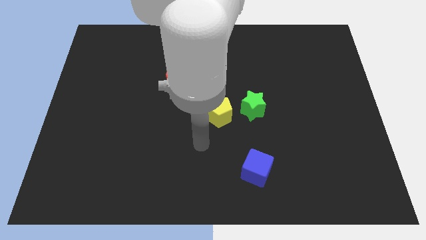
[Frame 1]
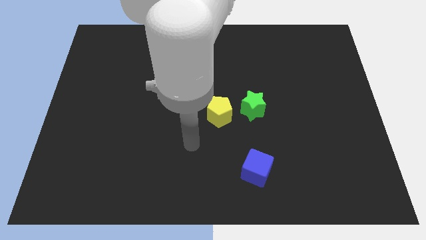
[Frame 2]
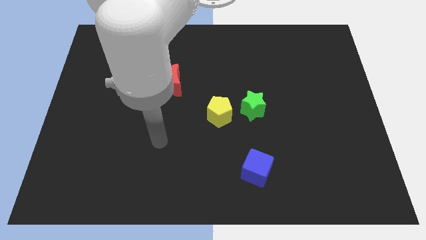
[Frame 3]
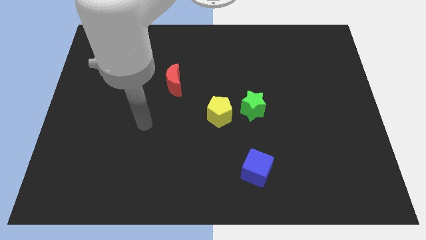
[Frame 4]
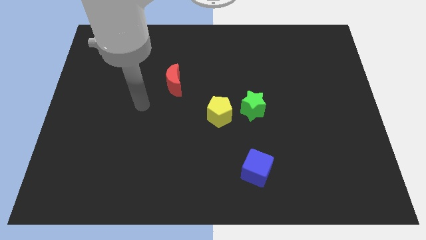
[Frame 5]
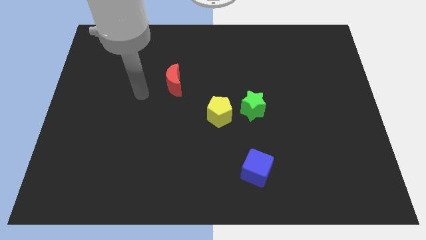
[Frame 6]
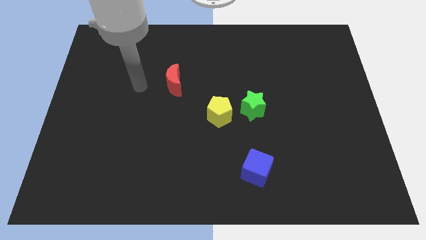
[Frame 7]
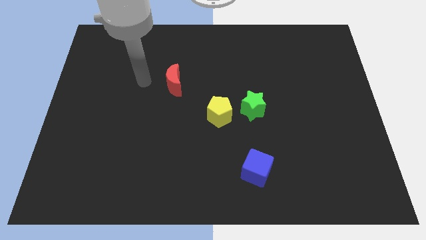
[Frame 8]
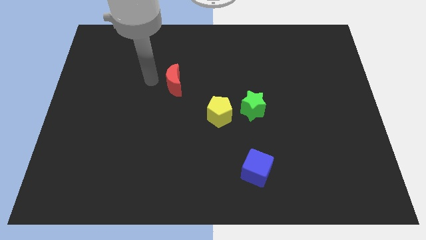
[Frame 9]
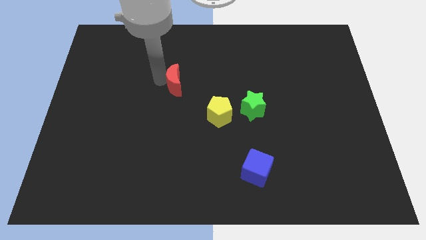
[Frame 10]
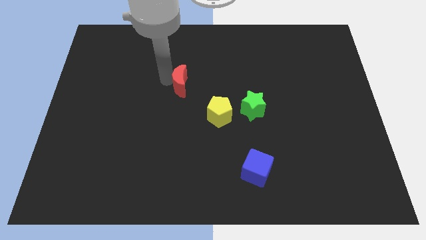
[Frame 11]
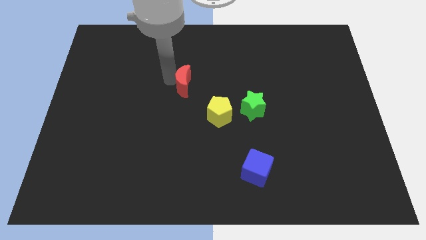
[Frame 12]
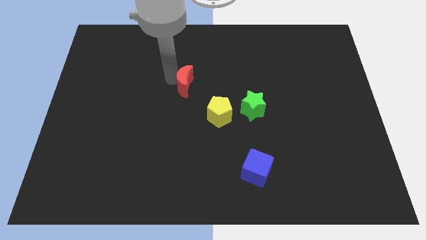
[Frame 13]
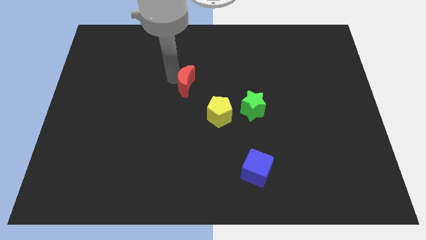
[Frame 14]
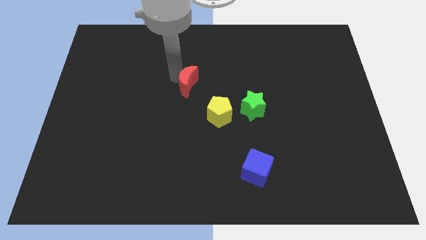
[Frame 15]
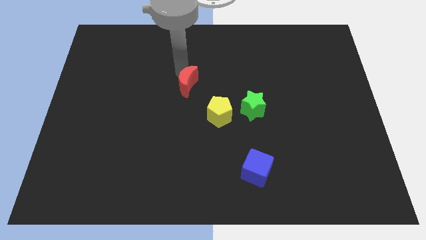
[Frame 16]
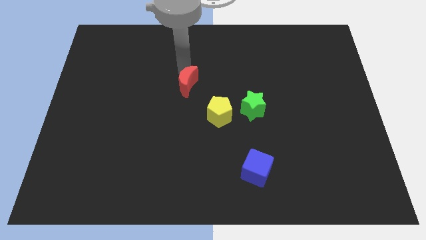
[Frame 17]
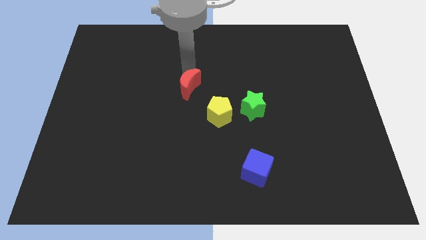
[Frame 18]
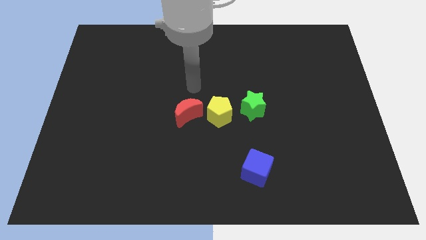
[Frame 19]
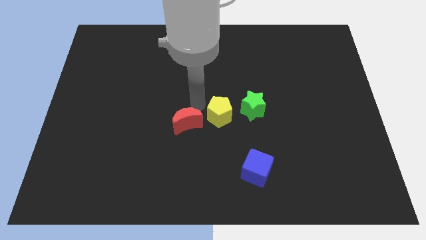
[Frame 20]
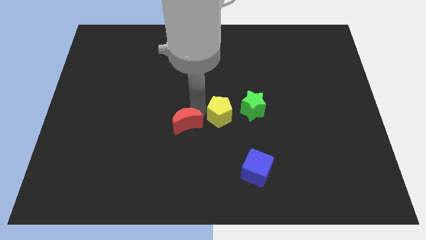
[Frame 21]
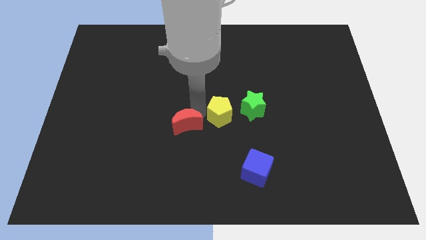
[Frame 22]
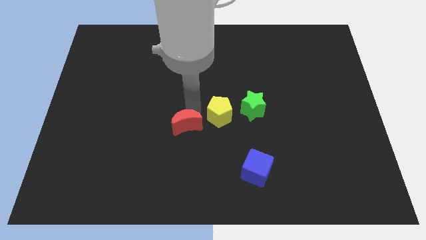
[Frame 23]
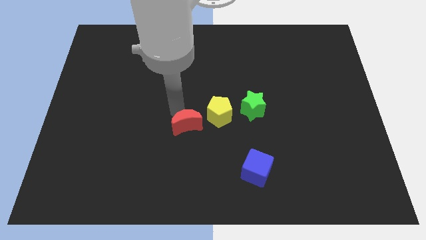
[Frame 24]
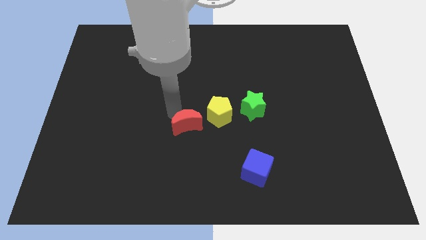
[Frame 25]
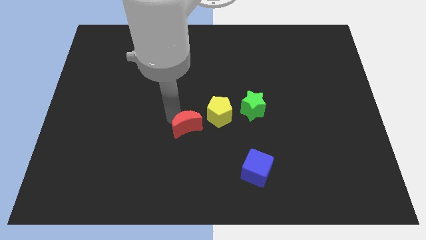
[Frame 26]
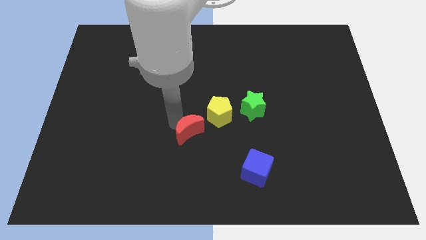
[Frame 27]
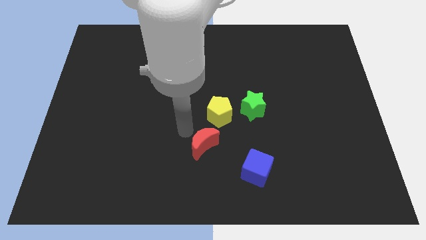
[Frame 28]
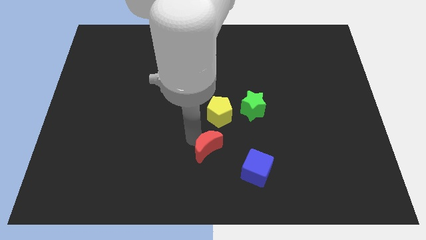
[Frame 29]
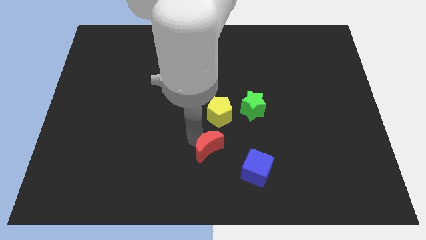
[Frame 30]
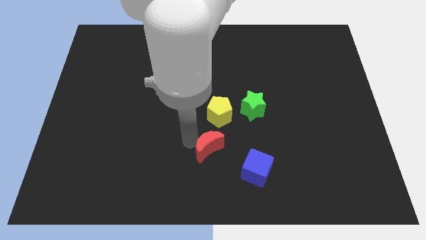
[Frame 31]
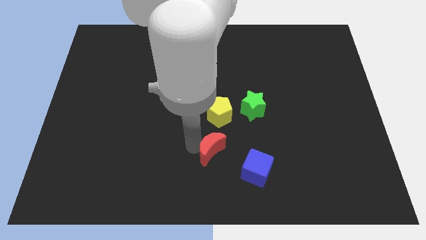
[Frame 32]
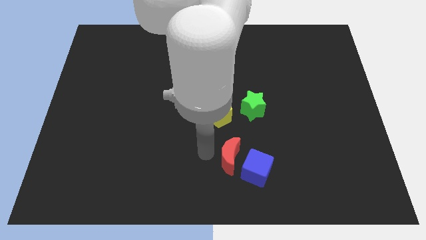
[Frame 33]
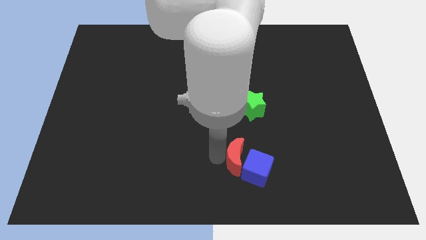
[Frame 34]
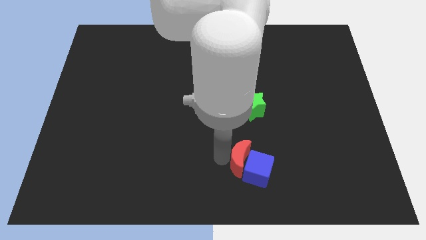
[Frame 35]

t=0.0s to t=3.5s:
move the red moon next to the blue cube

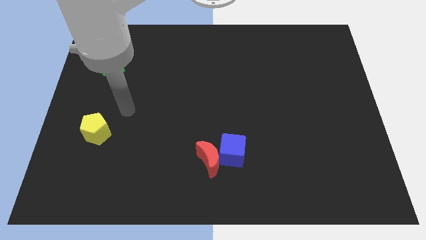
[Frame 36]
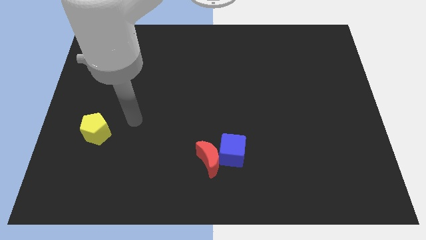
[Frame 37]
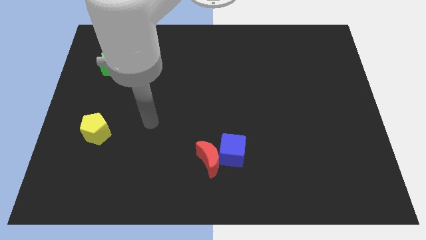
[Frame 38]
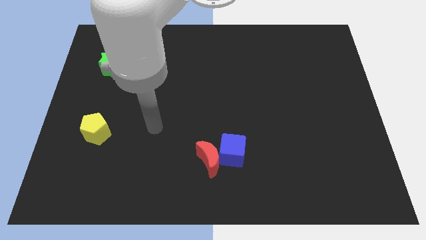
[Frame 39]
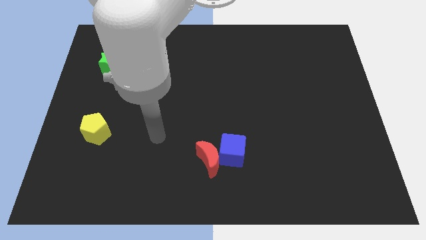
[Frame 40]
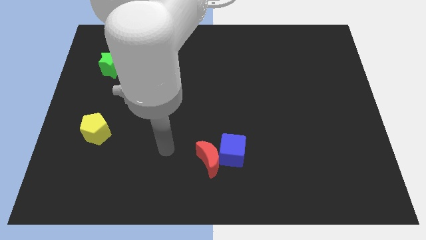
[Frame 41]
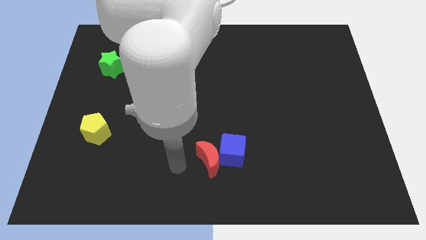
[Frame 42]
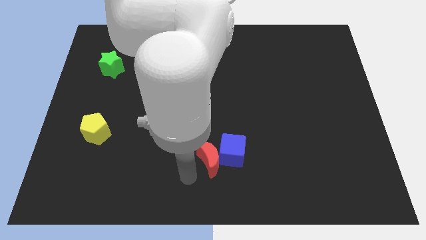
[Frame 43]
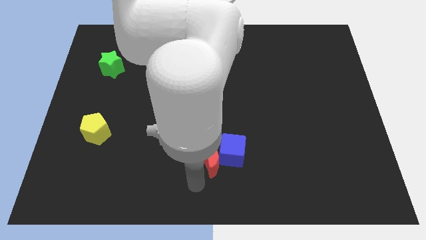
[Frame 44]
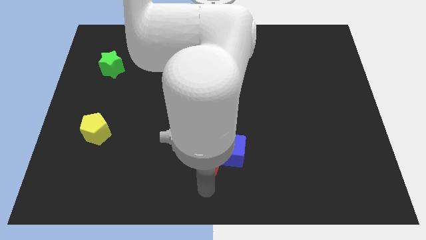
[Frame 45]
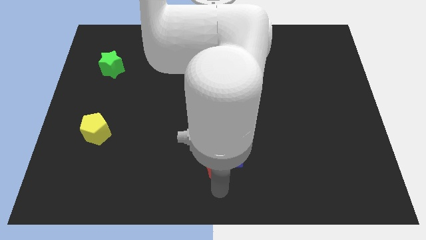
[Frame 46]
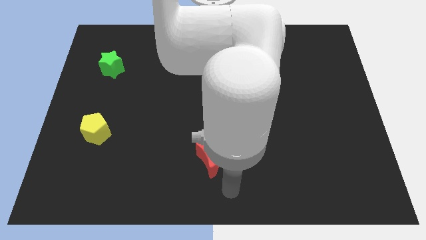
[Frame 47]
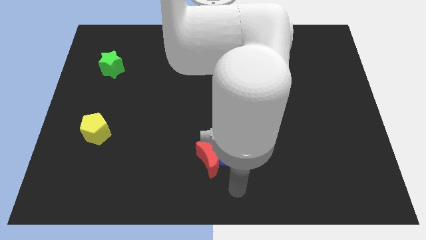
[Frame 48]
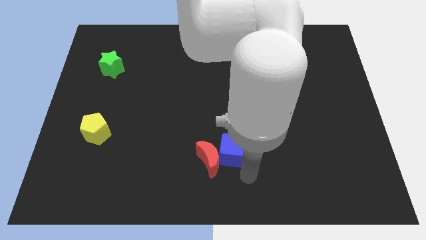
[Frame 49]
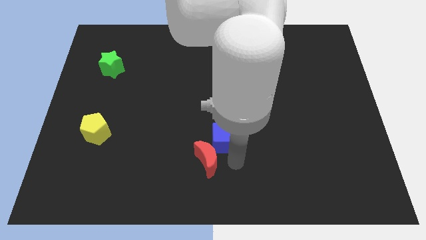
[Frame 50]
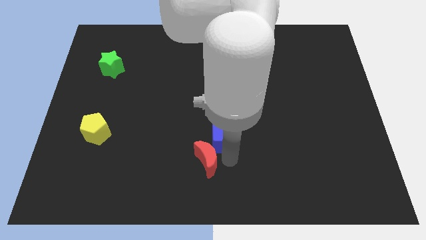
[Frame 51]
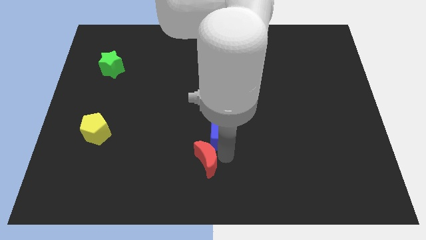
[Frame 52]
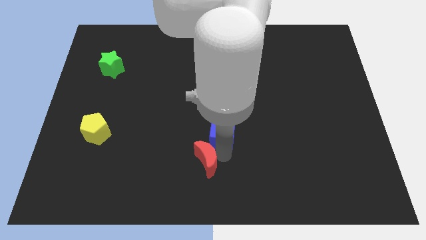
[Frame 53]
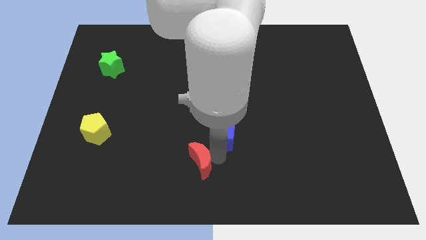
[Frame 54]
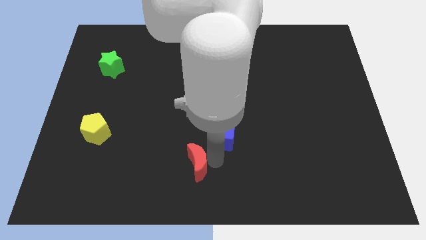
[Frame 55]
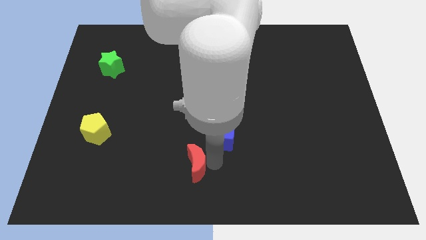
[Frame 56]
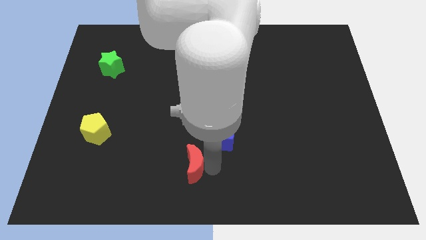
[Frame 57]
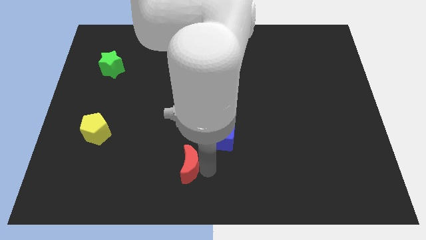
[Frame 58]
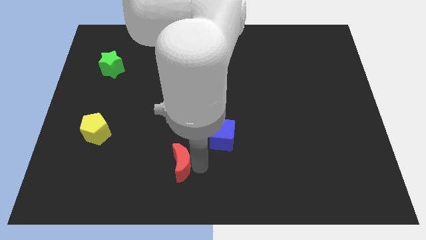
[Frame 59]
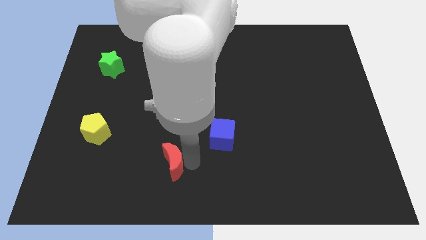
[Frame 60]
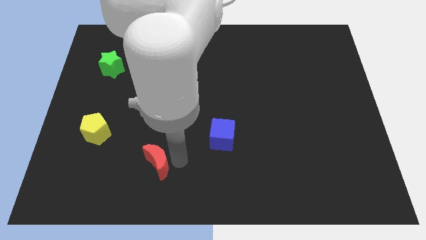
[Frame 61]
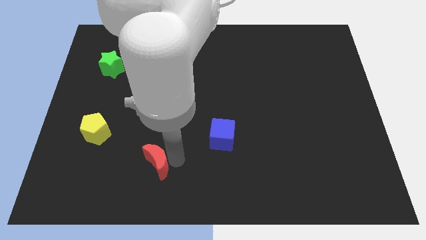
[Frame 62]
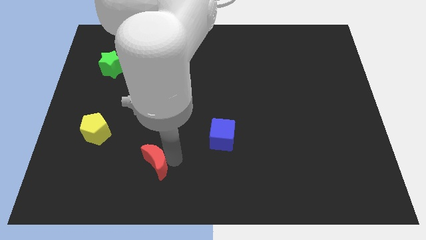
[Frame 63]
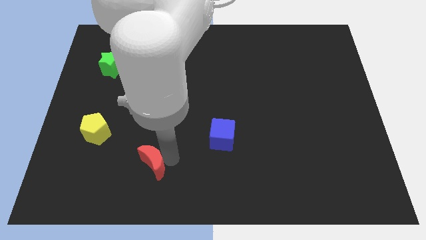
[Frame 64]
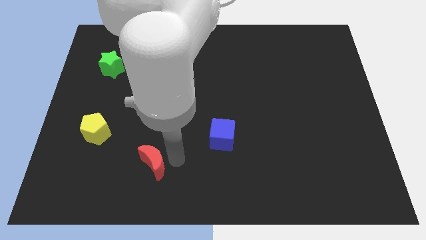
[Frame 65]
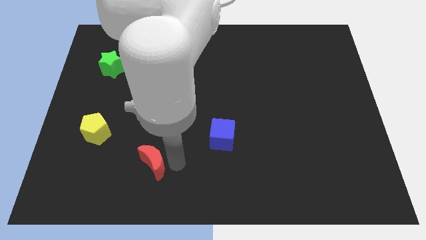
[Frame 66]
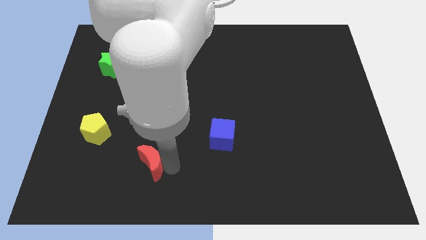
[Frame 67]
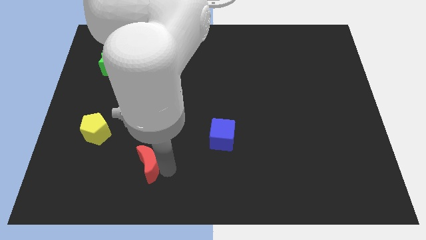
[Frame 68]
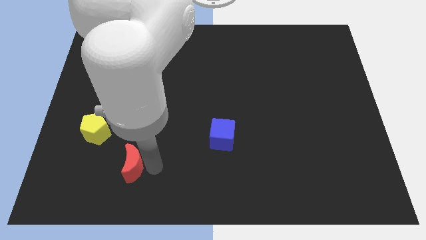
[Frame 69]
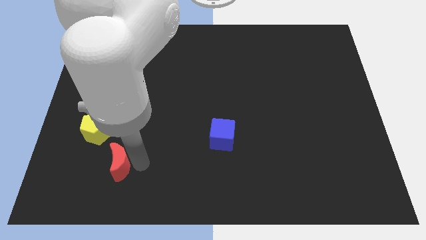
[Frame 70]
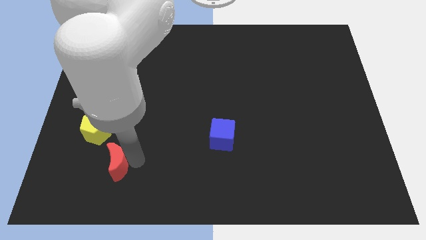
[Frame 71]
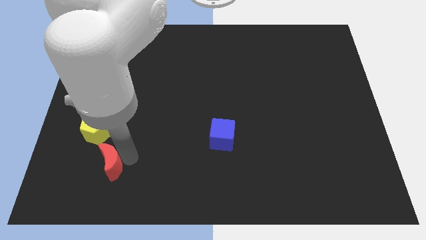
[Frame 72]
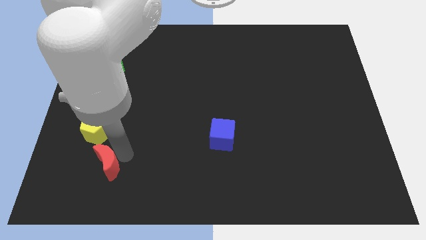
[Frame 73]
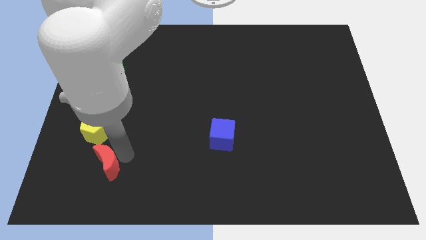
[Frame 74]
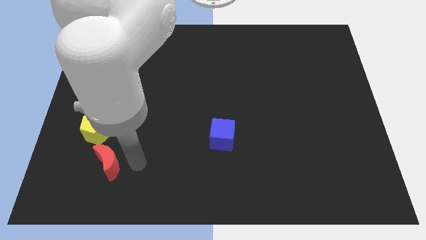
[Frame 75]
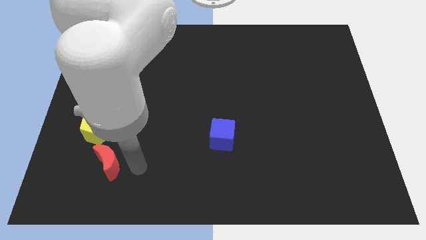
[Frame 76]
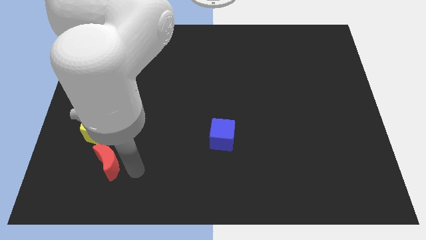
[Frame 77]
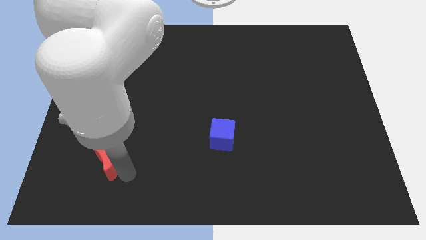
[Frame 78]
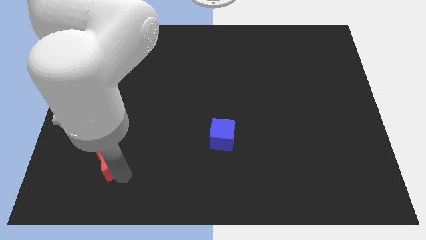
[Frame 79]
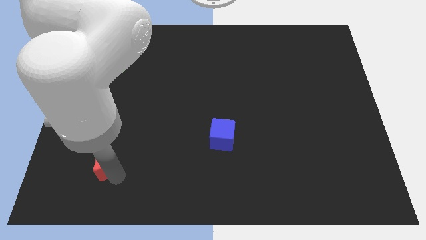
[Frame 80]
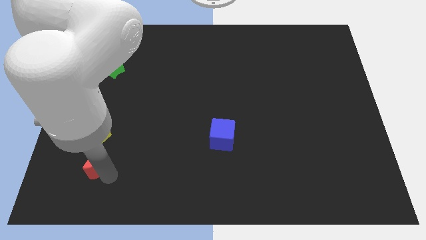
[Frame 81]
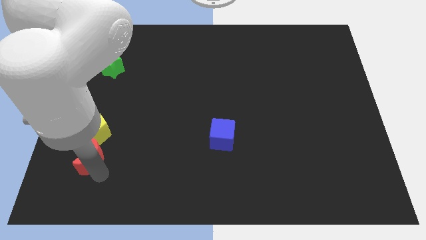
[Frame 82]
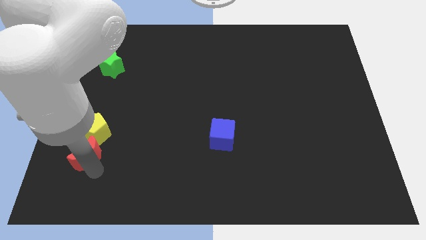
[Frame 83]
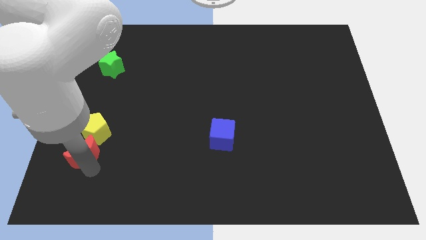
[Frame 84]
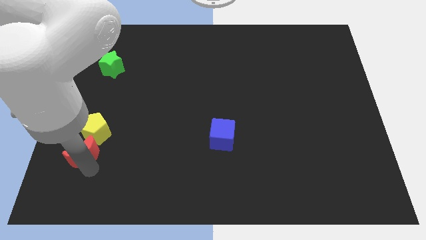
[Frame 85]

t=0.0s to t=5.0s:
put the red moon next to the yellow block
